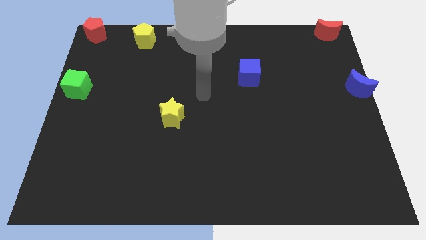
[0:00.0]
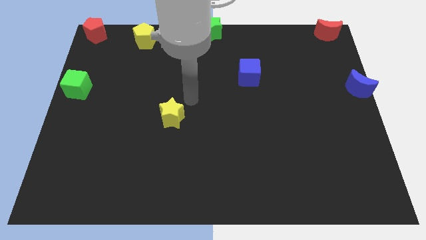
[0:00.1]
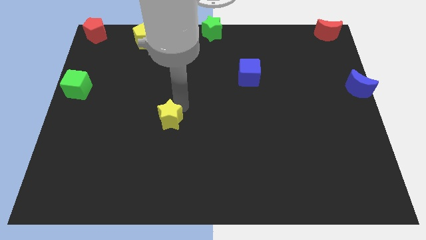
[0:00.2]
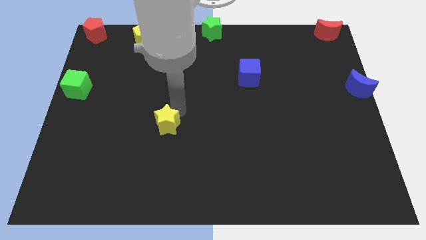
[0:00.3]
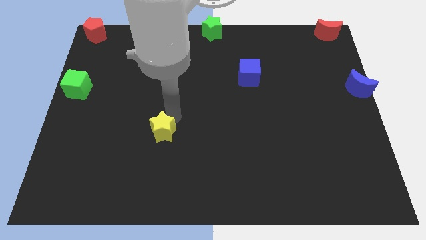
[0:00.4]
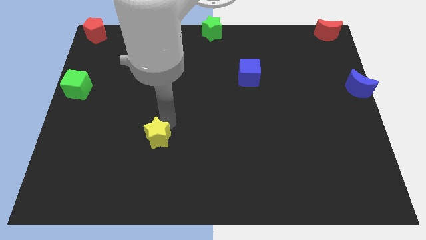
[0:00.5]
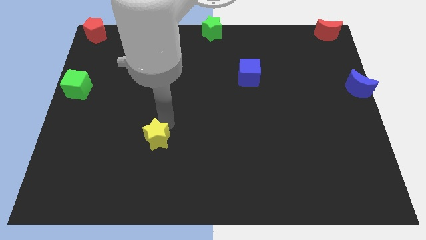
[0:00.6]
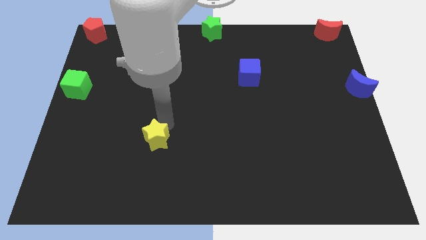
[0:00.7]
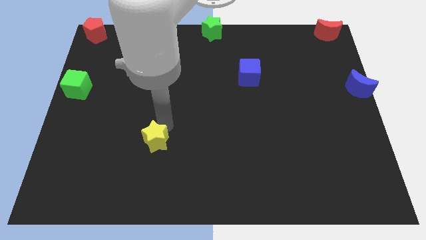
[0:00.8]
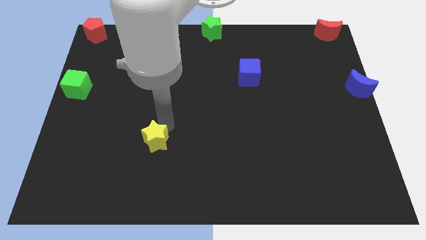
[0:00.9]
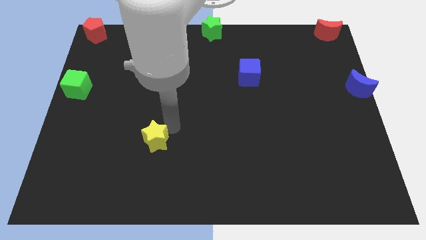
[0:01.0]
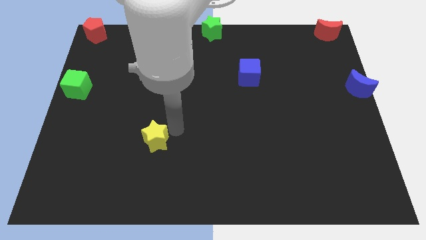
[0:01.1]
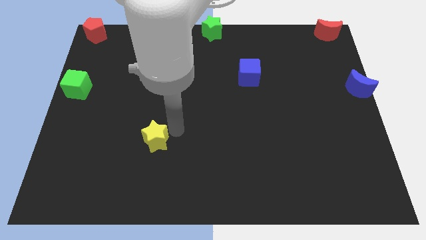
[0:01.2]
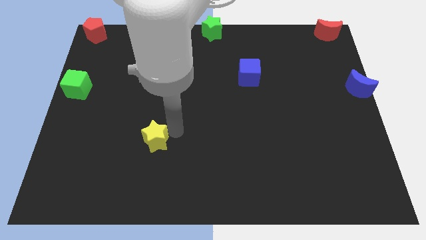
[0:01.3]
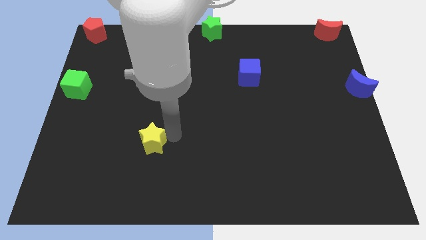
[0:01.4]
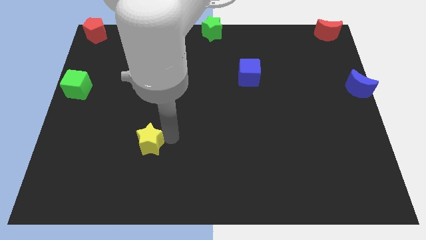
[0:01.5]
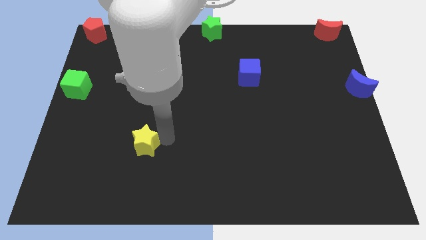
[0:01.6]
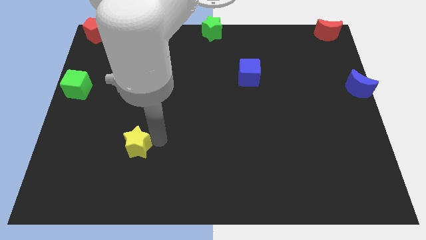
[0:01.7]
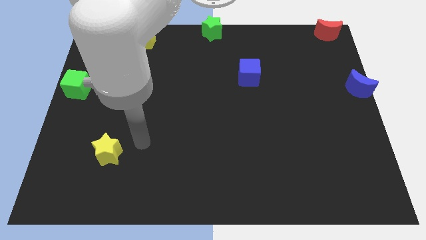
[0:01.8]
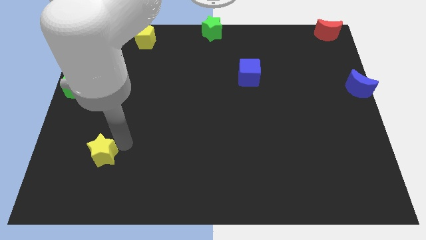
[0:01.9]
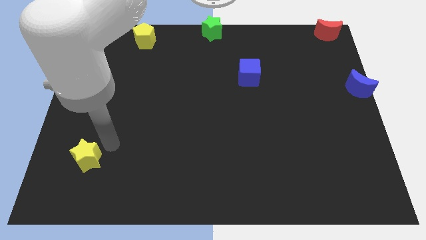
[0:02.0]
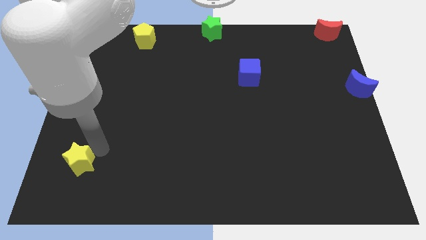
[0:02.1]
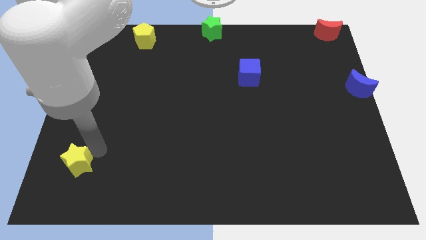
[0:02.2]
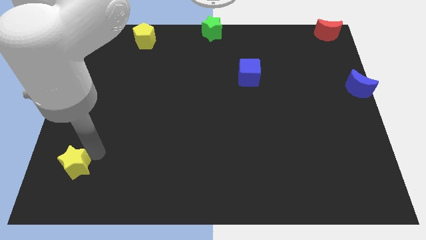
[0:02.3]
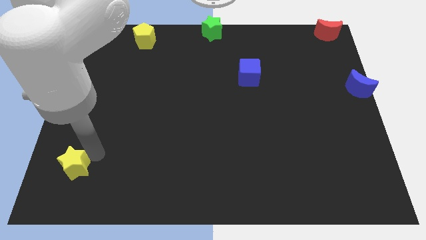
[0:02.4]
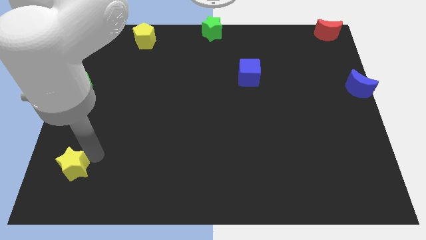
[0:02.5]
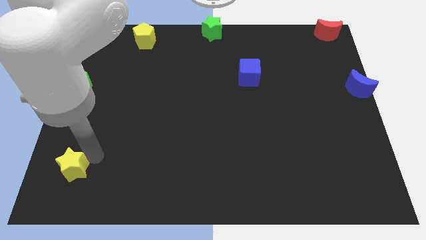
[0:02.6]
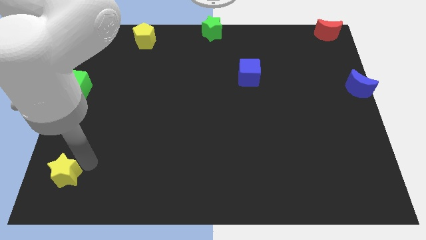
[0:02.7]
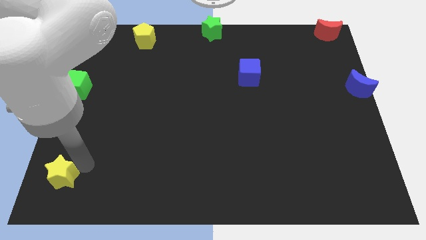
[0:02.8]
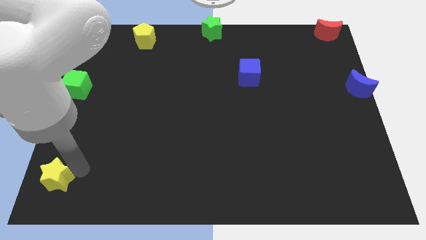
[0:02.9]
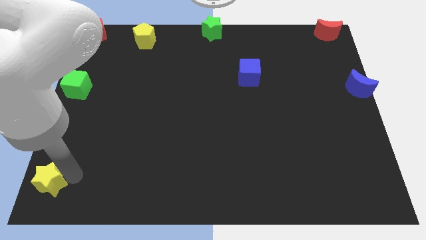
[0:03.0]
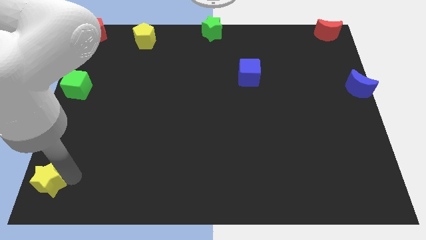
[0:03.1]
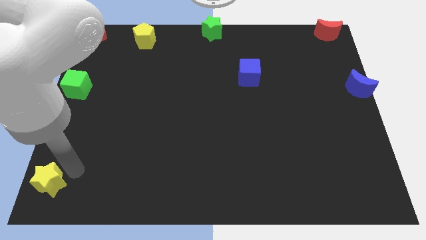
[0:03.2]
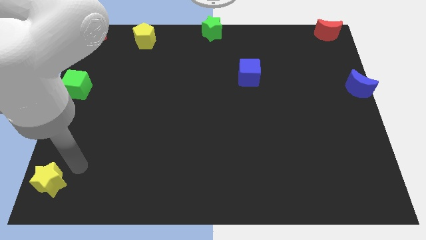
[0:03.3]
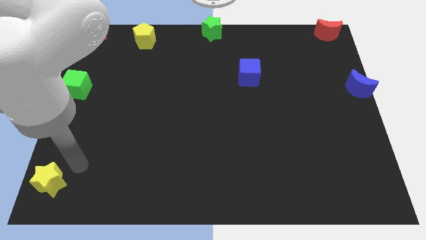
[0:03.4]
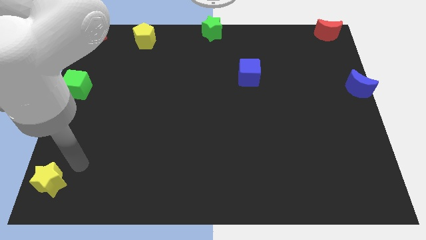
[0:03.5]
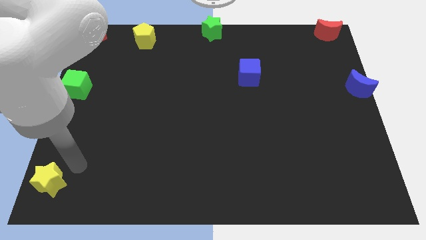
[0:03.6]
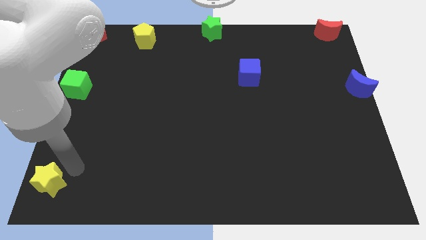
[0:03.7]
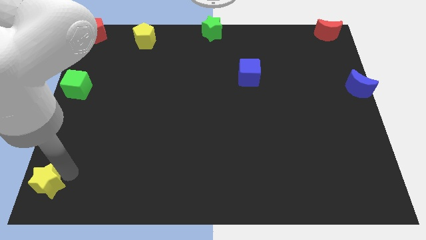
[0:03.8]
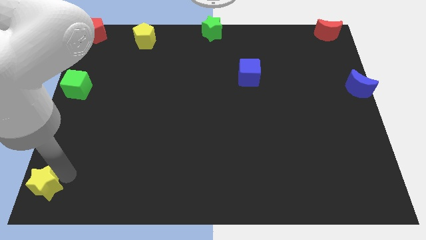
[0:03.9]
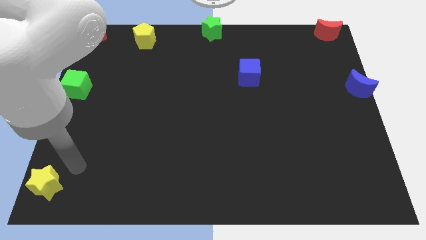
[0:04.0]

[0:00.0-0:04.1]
push the yellow star to the bottom left corner

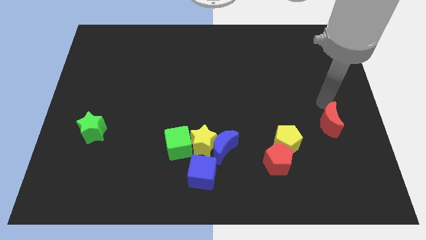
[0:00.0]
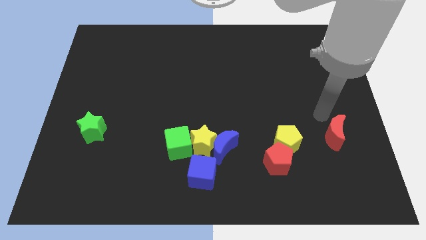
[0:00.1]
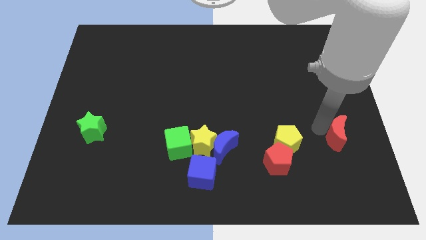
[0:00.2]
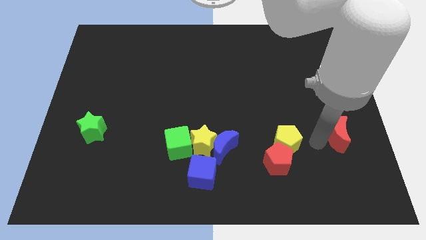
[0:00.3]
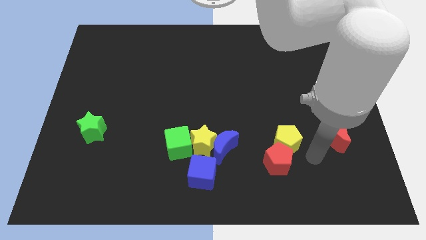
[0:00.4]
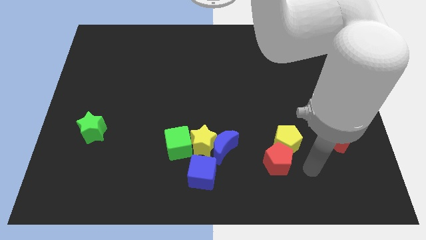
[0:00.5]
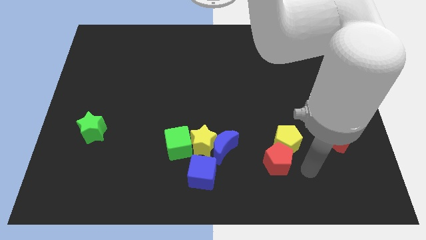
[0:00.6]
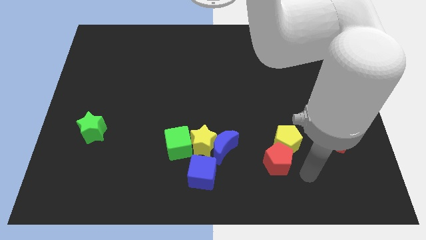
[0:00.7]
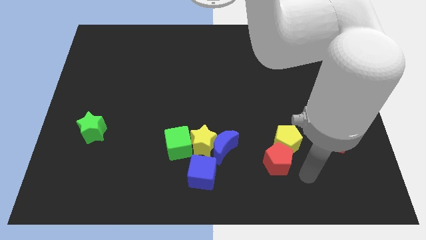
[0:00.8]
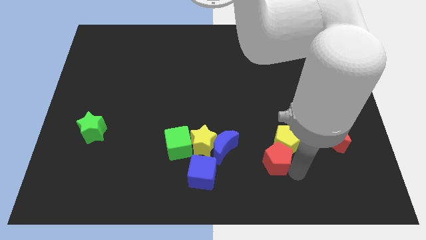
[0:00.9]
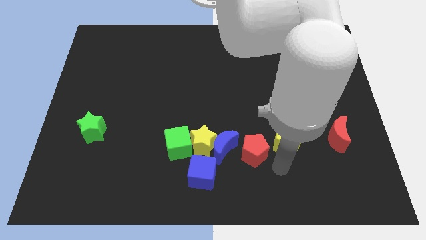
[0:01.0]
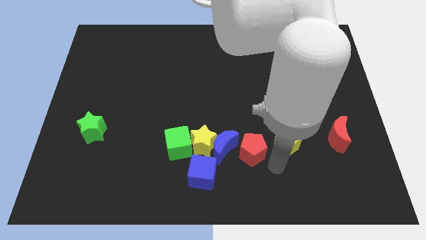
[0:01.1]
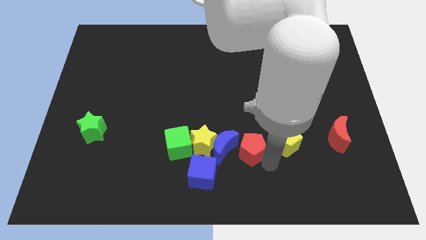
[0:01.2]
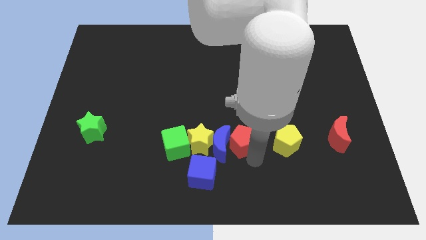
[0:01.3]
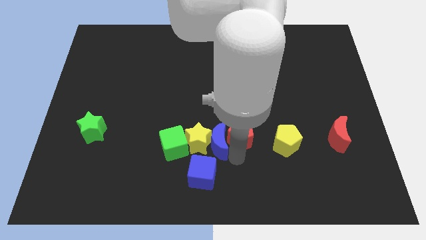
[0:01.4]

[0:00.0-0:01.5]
push the red pentagon in to blue moon

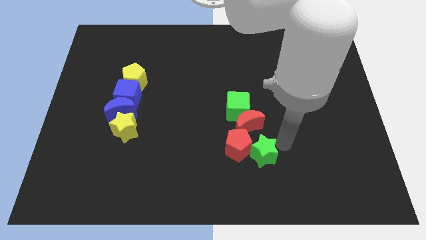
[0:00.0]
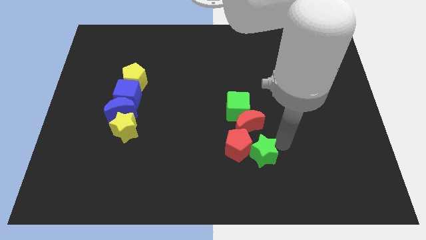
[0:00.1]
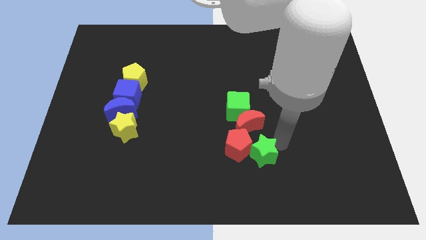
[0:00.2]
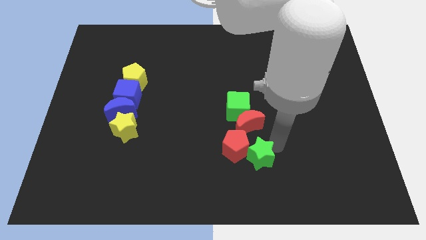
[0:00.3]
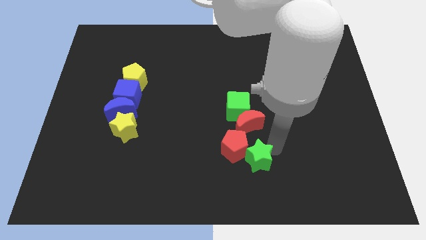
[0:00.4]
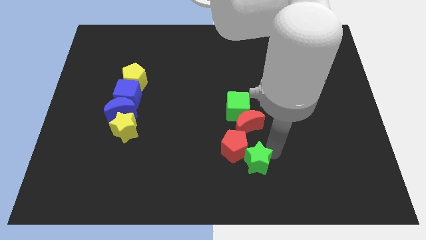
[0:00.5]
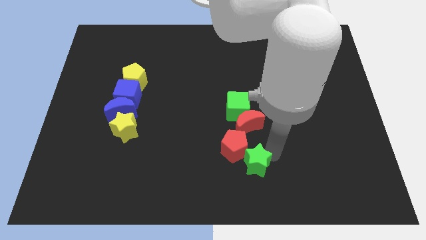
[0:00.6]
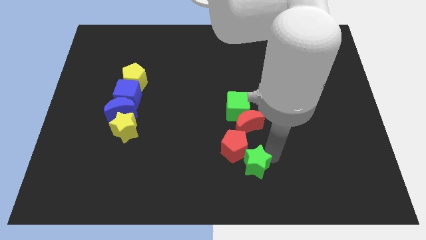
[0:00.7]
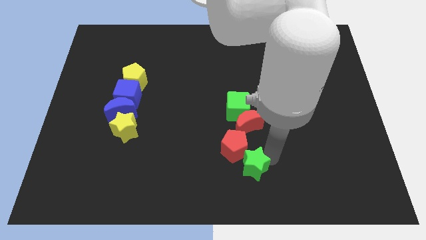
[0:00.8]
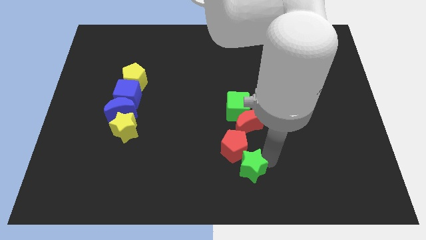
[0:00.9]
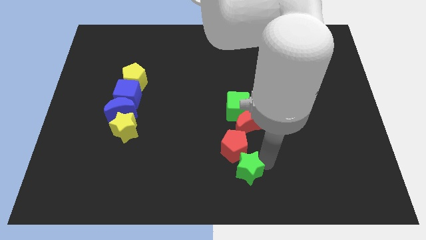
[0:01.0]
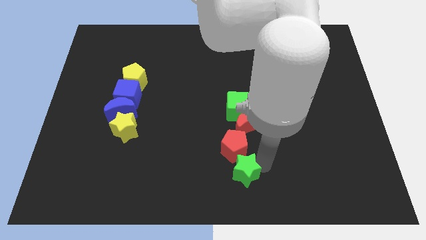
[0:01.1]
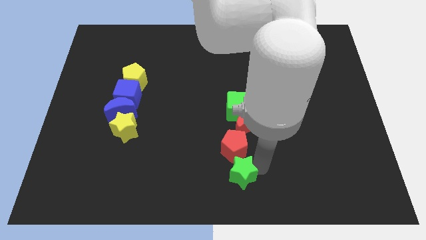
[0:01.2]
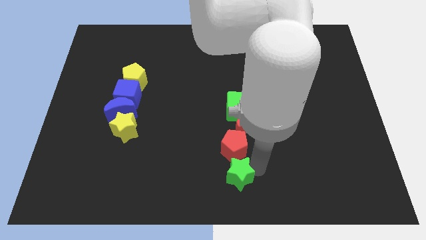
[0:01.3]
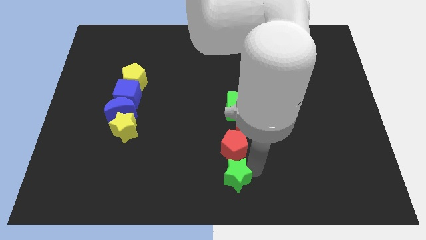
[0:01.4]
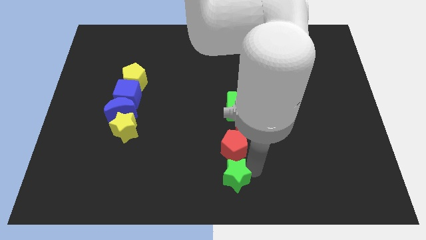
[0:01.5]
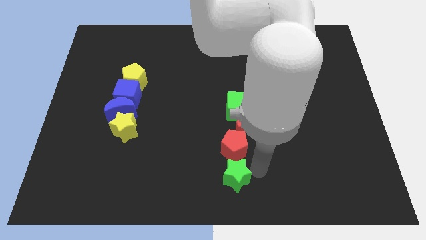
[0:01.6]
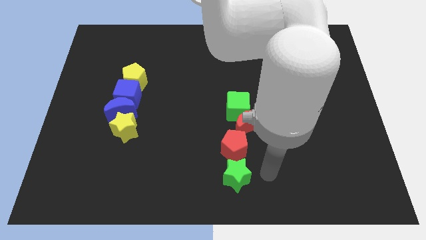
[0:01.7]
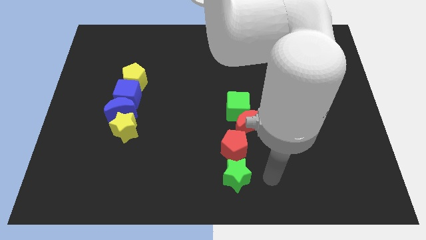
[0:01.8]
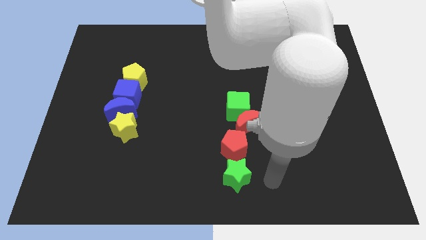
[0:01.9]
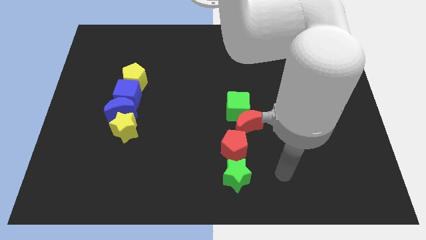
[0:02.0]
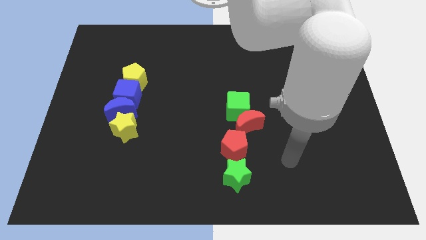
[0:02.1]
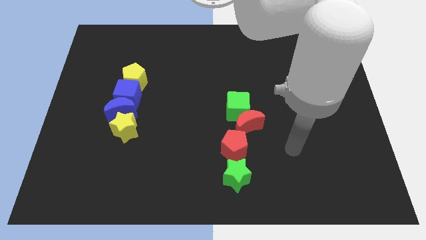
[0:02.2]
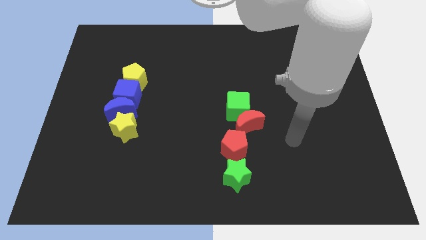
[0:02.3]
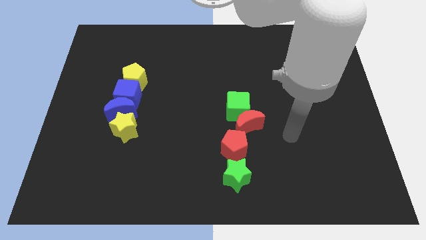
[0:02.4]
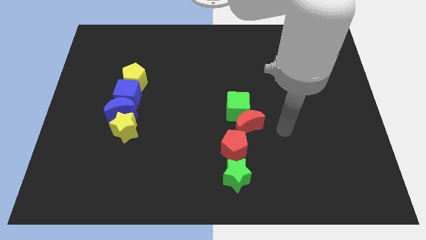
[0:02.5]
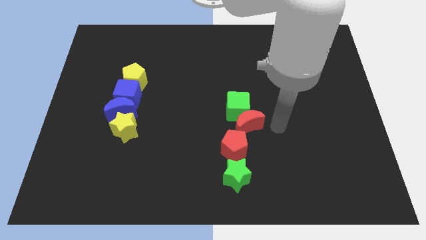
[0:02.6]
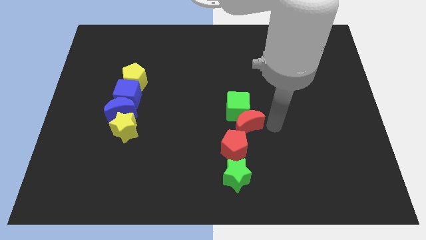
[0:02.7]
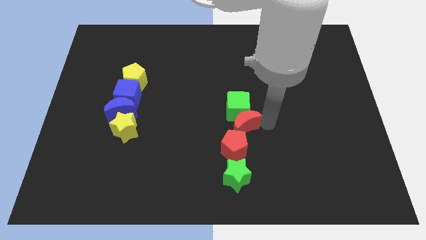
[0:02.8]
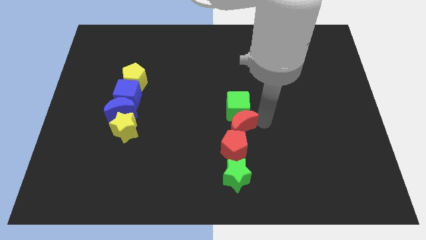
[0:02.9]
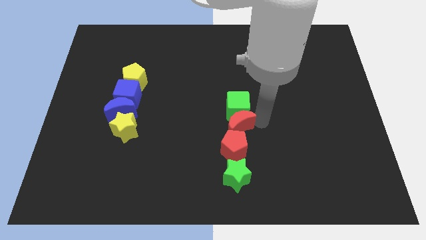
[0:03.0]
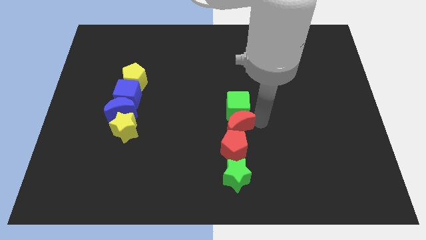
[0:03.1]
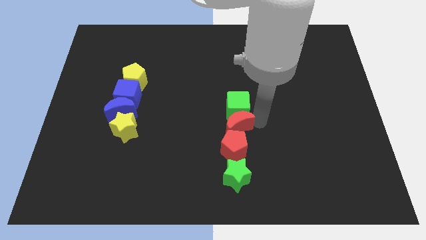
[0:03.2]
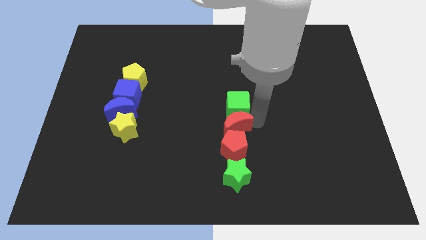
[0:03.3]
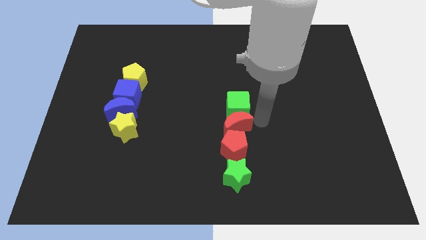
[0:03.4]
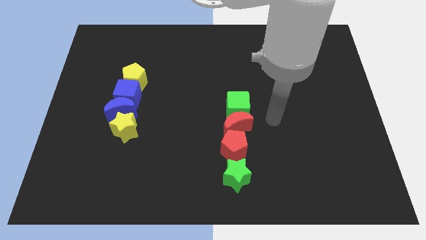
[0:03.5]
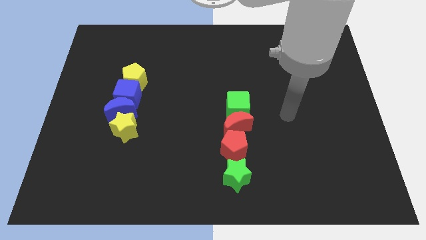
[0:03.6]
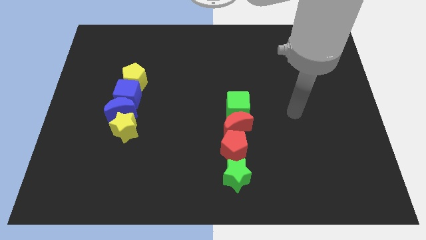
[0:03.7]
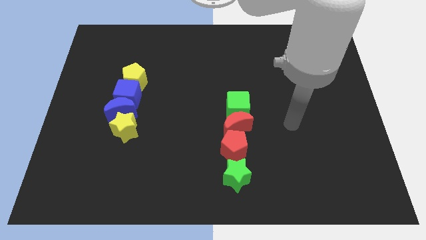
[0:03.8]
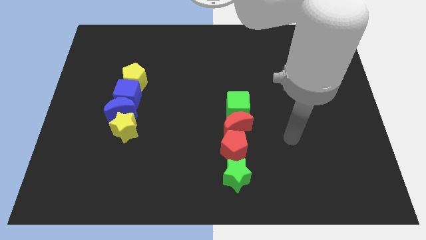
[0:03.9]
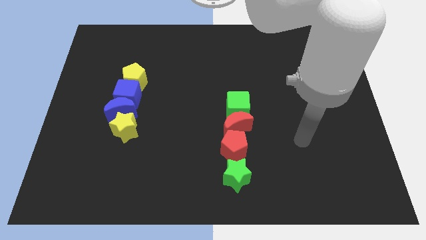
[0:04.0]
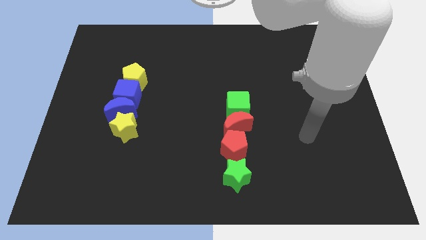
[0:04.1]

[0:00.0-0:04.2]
adjust the green star and the red crescent
